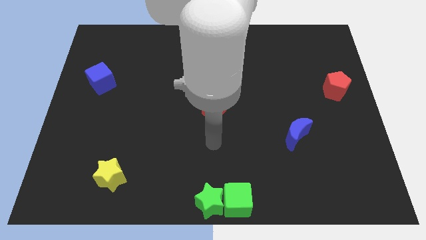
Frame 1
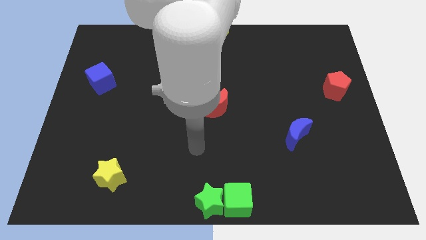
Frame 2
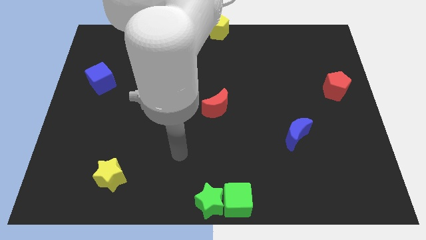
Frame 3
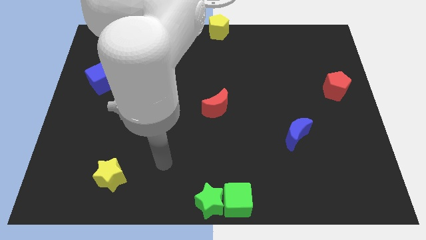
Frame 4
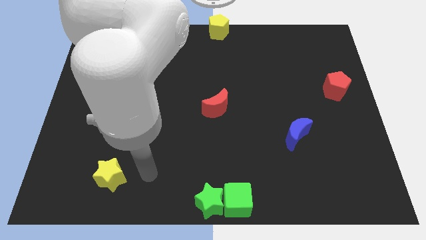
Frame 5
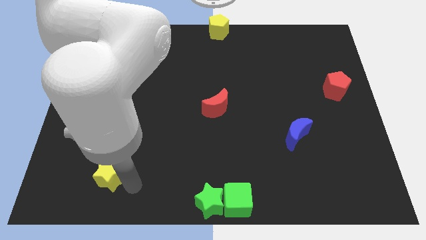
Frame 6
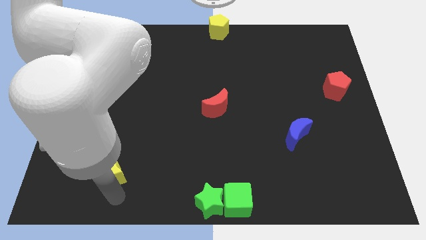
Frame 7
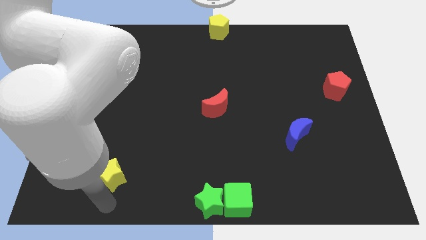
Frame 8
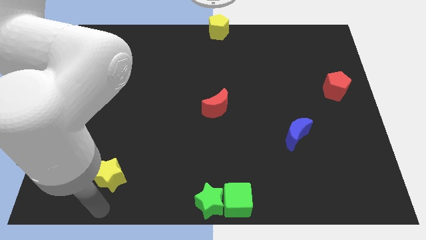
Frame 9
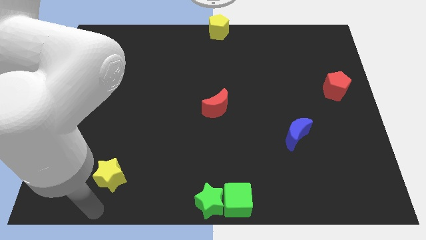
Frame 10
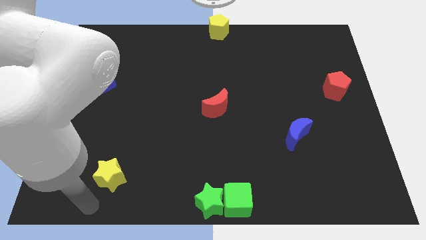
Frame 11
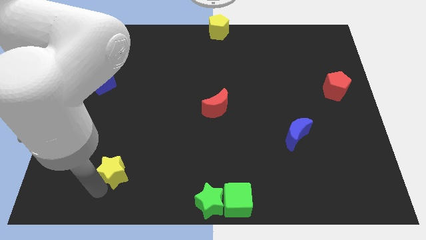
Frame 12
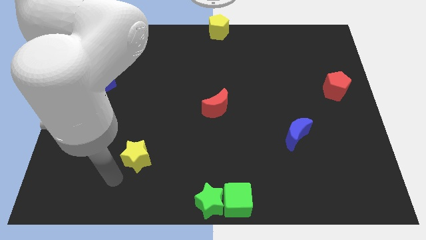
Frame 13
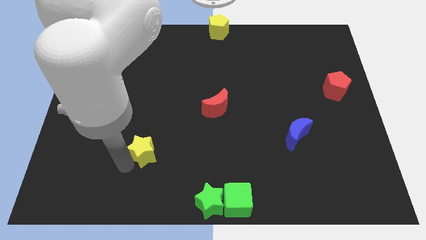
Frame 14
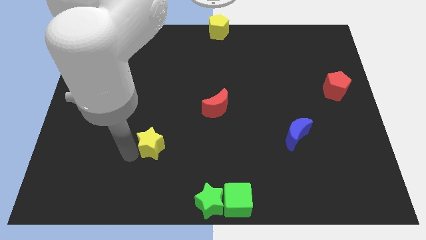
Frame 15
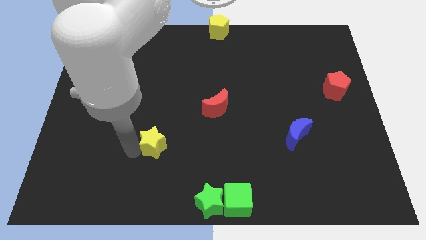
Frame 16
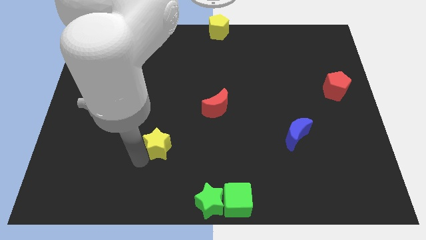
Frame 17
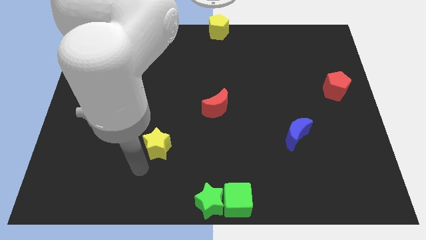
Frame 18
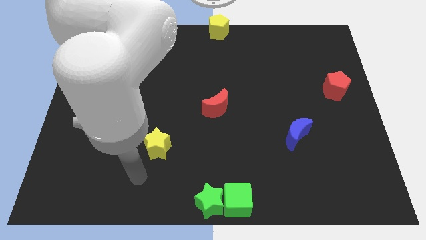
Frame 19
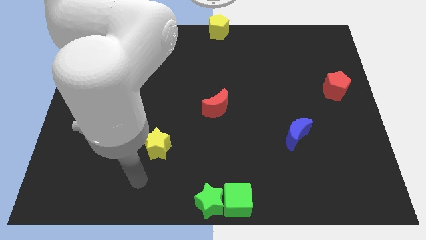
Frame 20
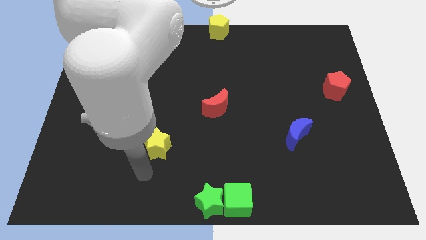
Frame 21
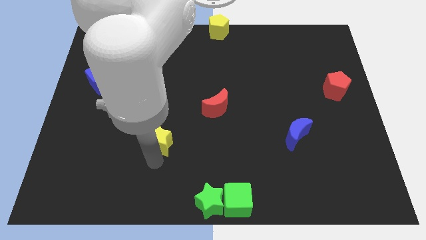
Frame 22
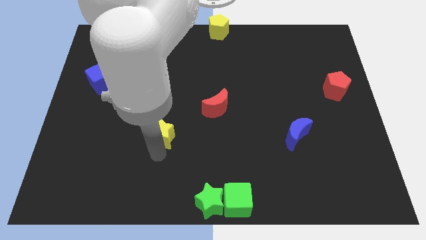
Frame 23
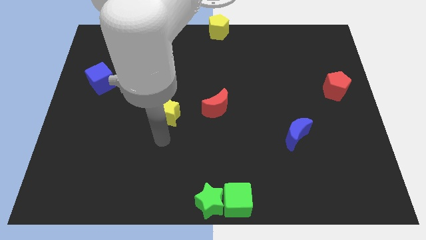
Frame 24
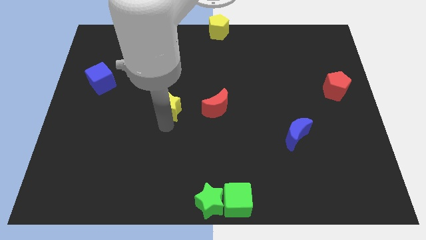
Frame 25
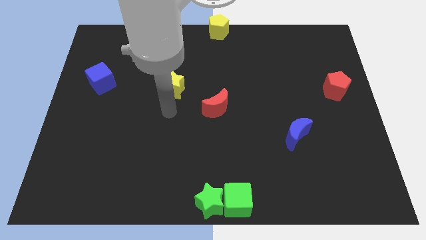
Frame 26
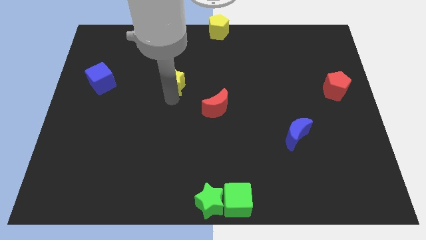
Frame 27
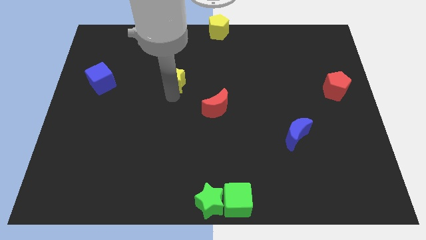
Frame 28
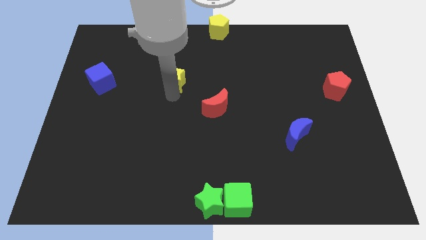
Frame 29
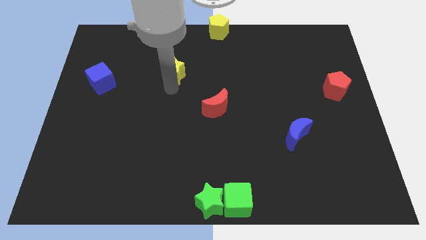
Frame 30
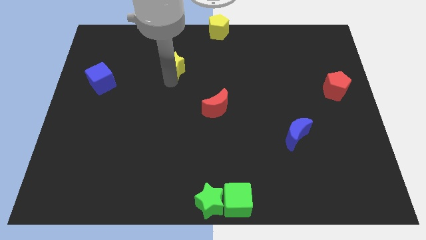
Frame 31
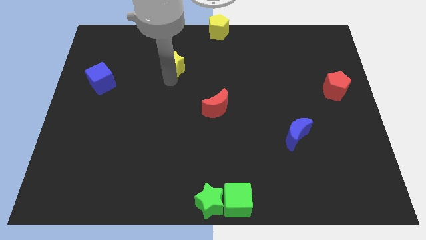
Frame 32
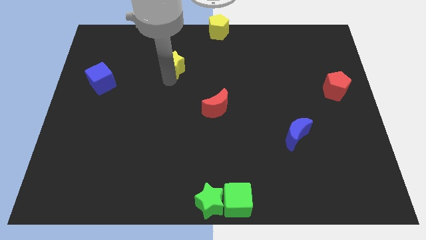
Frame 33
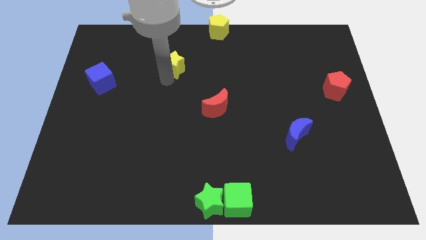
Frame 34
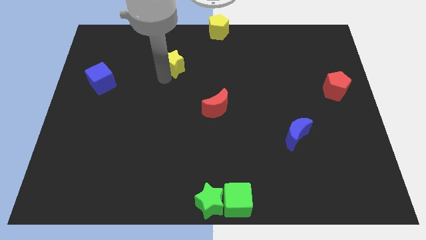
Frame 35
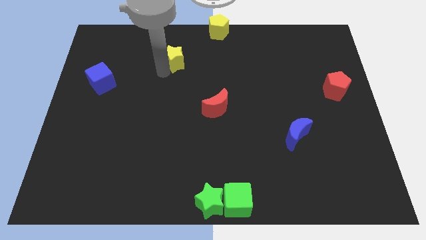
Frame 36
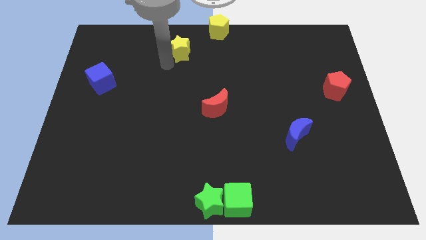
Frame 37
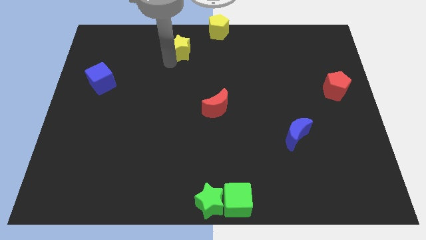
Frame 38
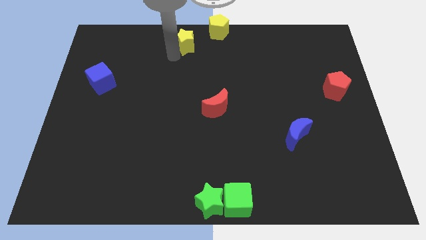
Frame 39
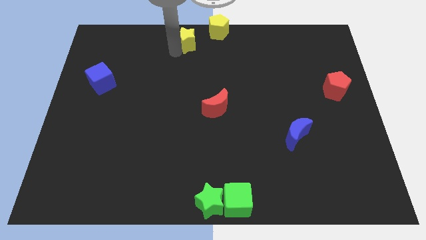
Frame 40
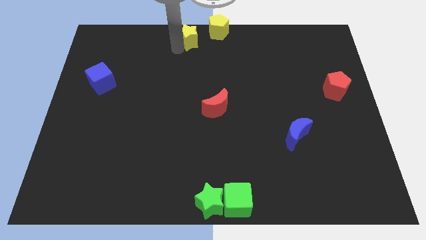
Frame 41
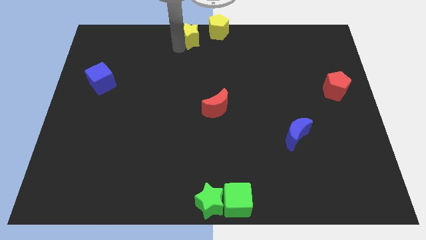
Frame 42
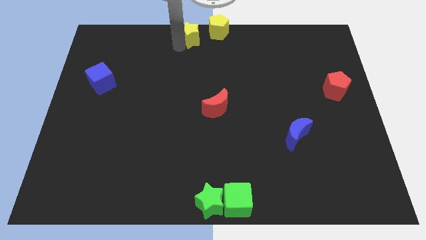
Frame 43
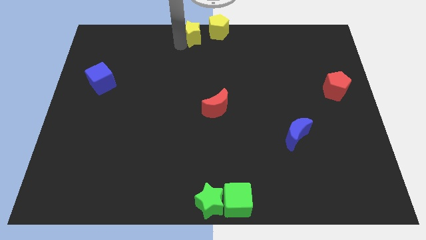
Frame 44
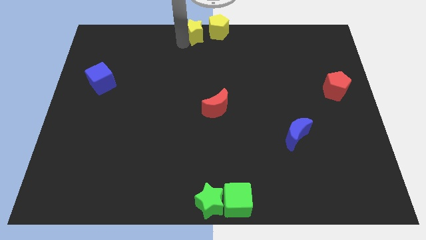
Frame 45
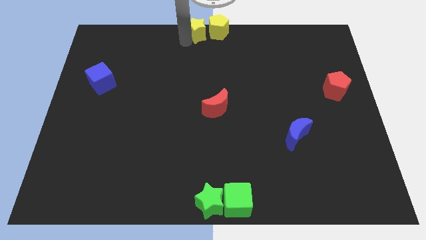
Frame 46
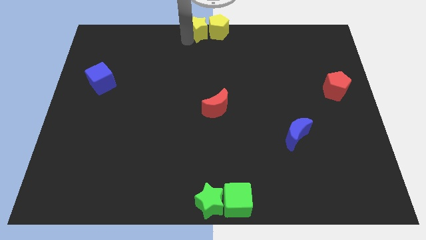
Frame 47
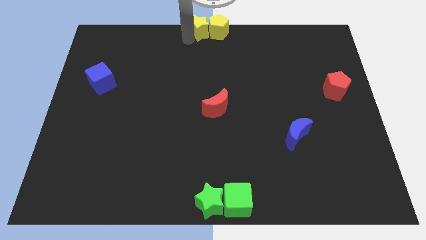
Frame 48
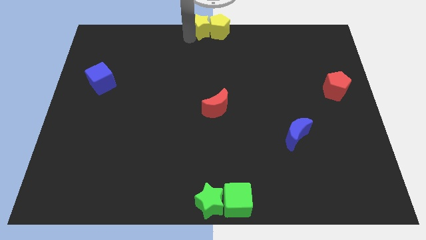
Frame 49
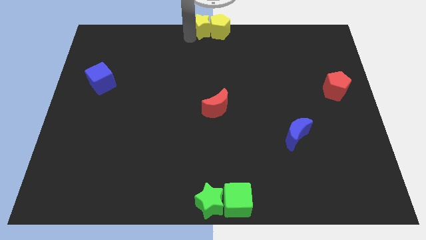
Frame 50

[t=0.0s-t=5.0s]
push the yellow star into the yellow pentagon

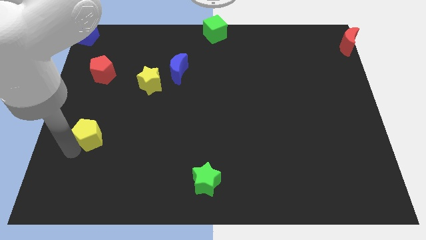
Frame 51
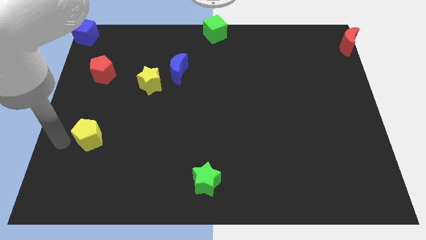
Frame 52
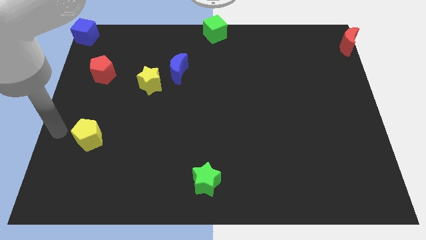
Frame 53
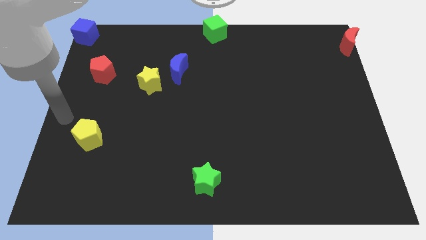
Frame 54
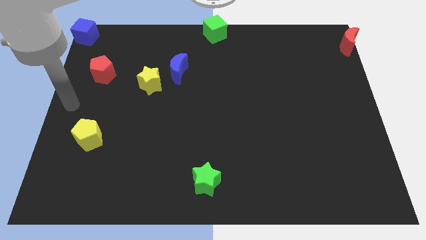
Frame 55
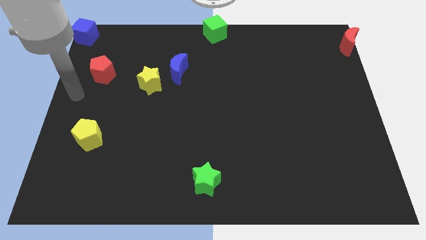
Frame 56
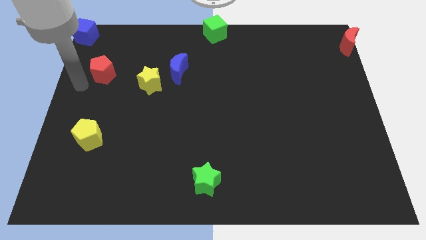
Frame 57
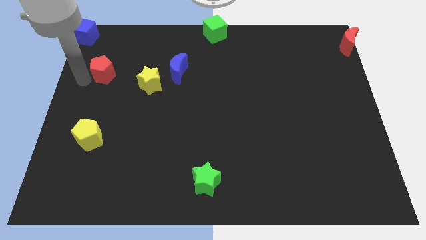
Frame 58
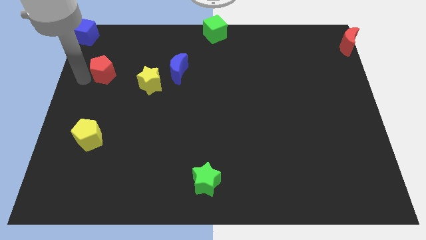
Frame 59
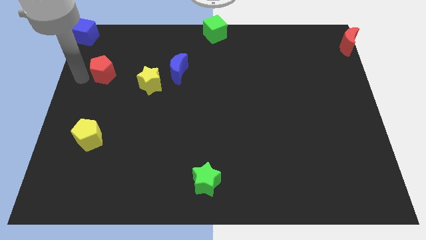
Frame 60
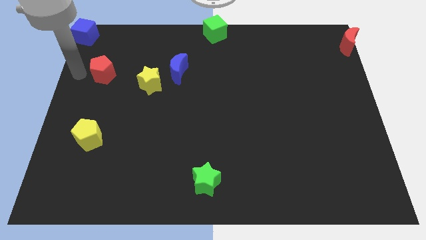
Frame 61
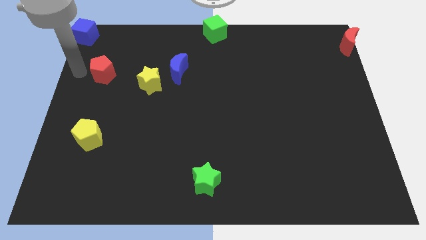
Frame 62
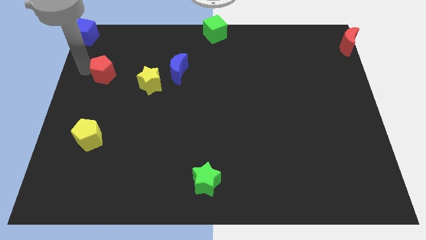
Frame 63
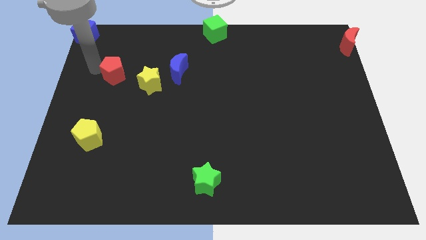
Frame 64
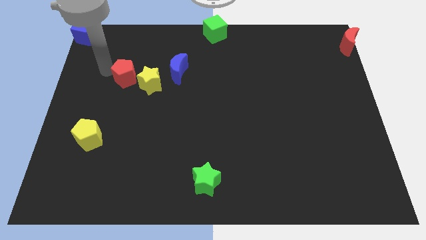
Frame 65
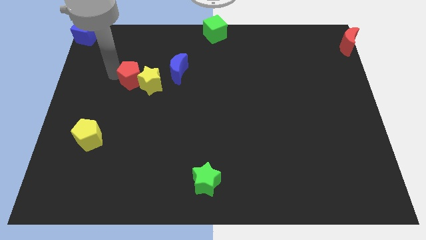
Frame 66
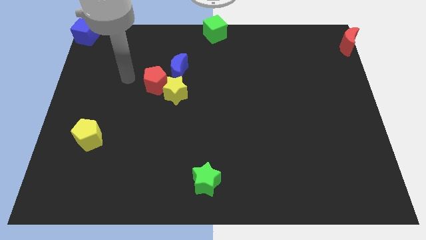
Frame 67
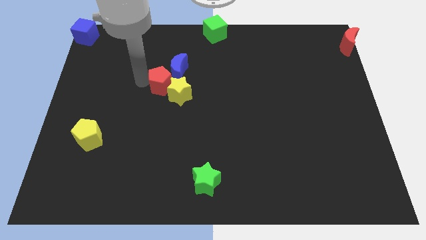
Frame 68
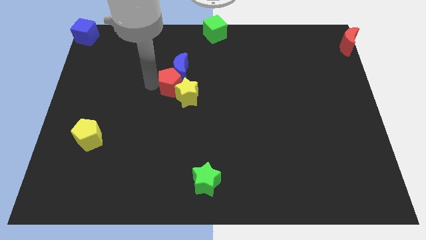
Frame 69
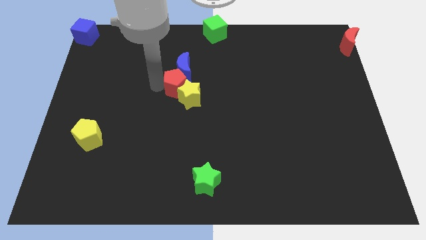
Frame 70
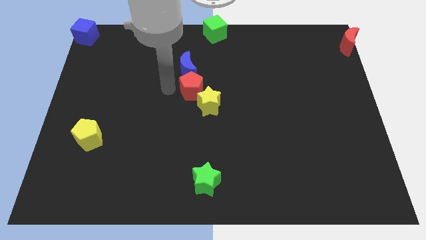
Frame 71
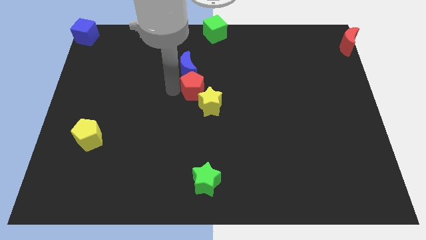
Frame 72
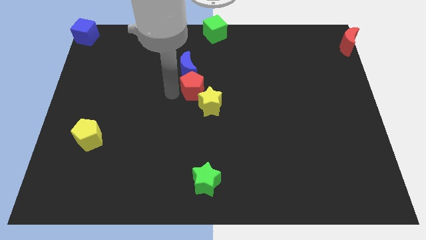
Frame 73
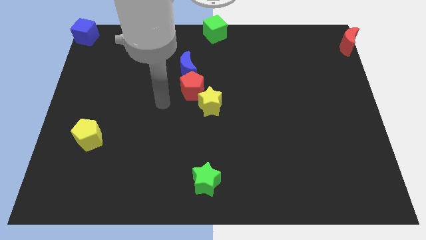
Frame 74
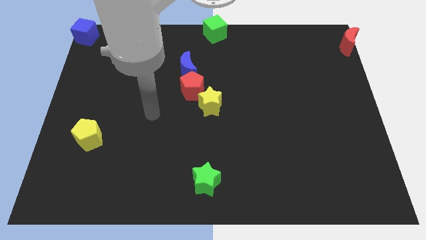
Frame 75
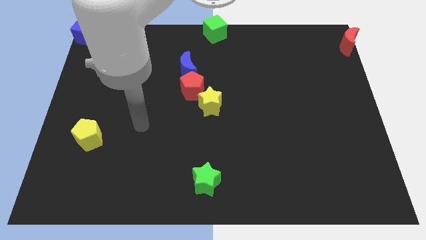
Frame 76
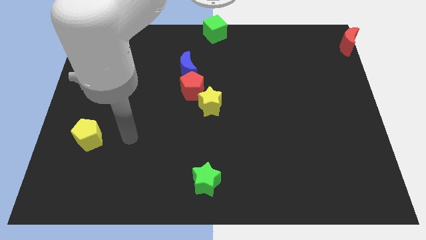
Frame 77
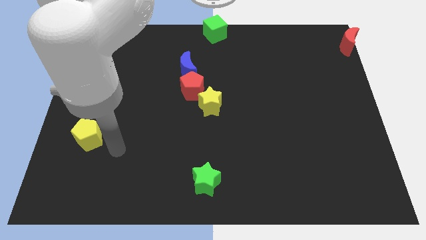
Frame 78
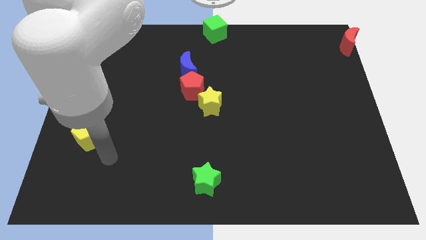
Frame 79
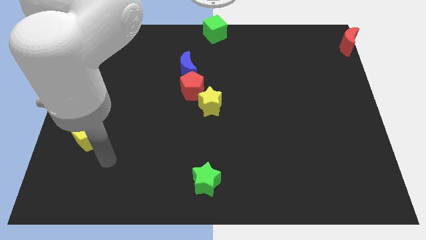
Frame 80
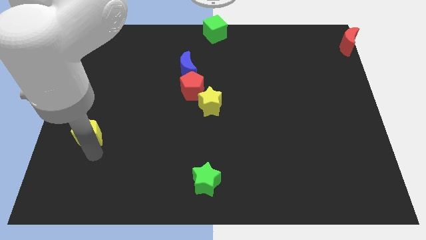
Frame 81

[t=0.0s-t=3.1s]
push the red pentagon into the yellow star

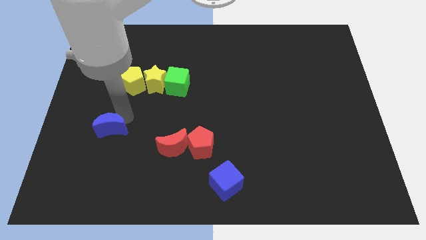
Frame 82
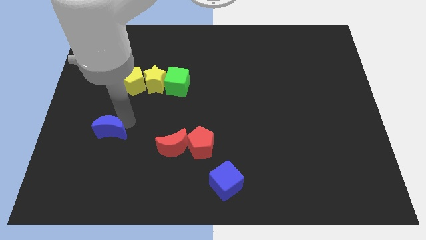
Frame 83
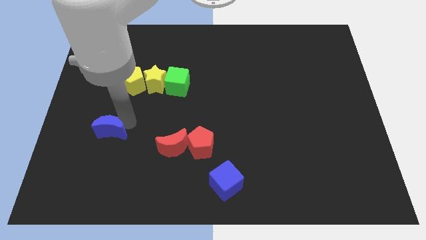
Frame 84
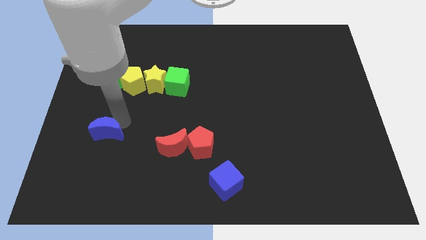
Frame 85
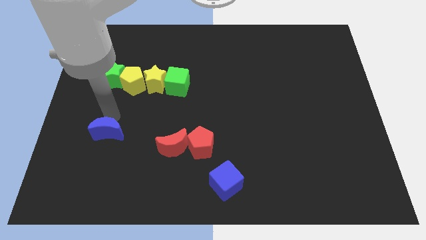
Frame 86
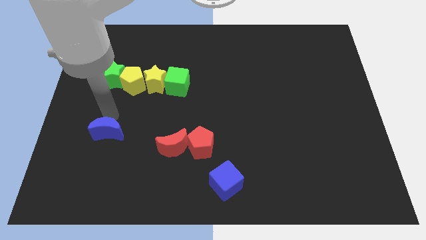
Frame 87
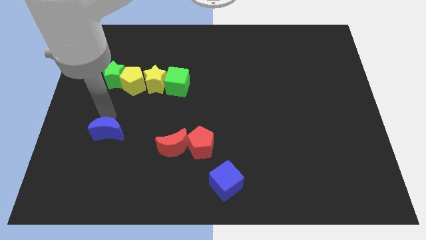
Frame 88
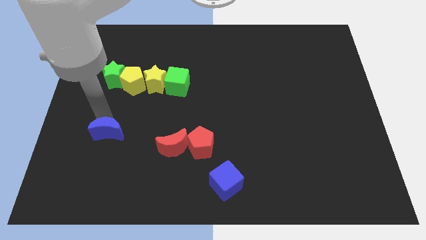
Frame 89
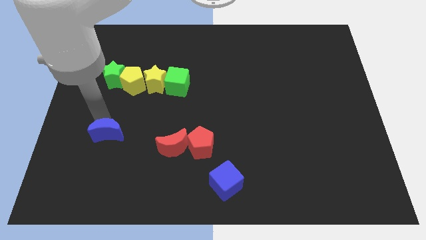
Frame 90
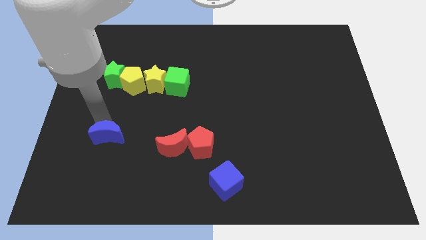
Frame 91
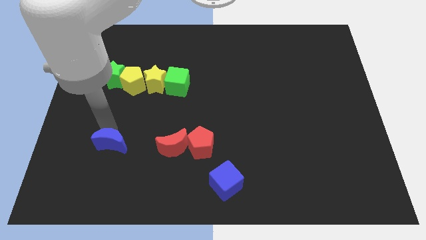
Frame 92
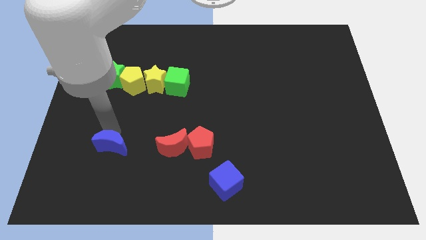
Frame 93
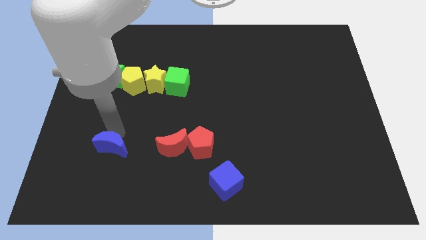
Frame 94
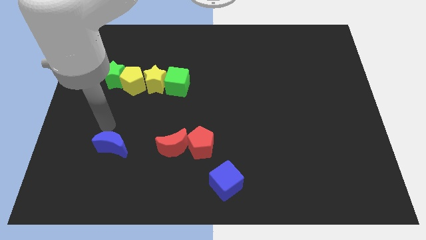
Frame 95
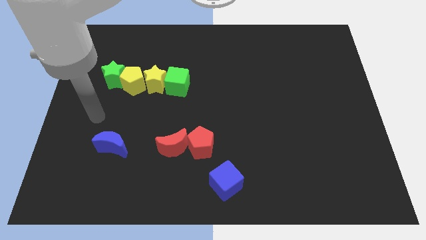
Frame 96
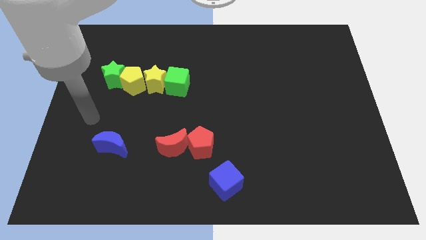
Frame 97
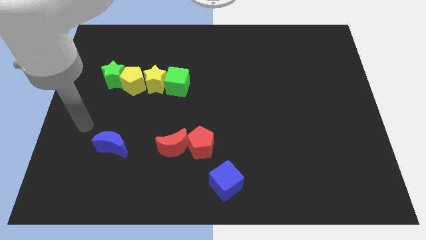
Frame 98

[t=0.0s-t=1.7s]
place the blue crescent horizontal parallel to the red crescent
